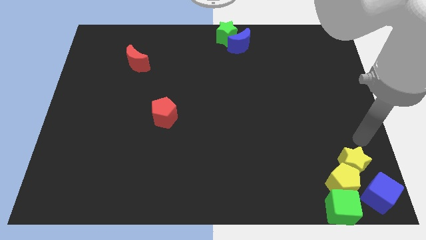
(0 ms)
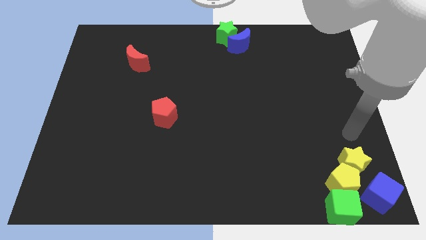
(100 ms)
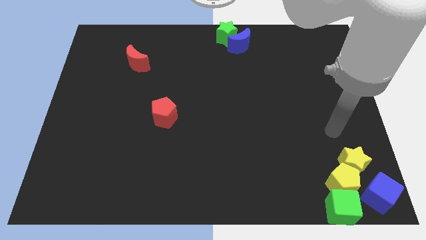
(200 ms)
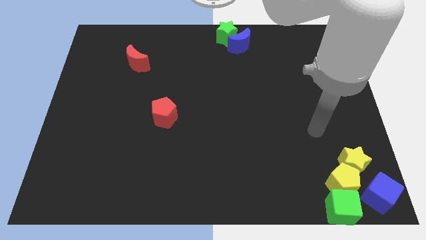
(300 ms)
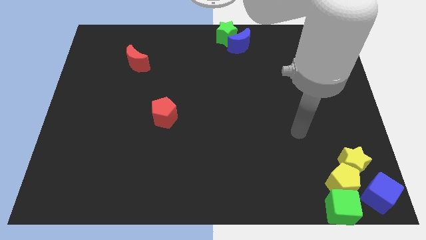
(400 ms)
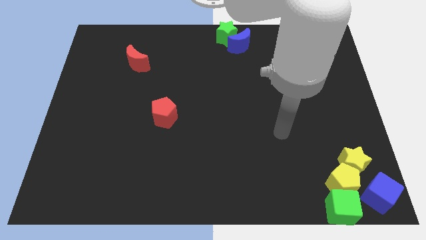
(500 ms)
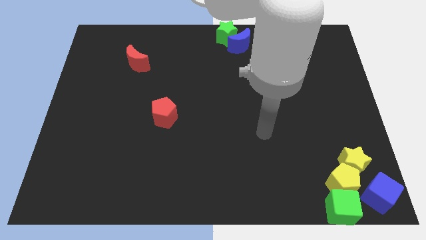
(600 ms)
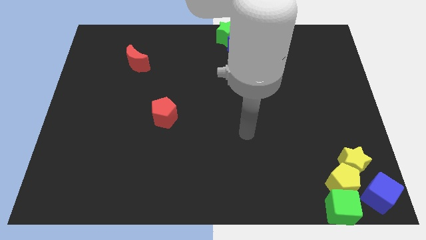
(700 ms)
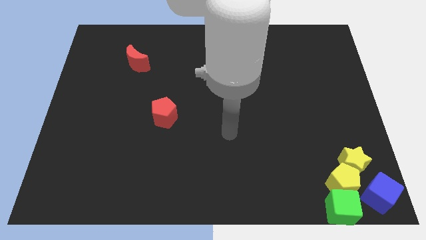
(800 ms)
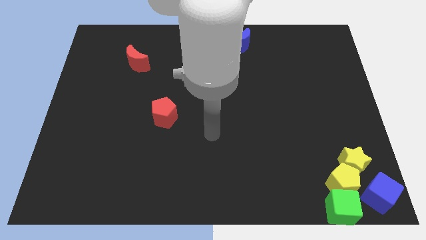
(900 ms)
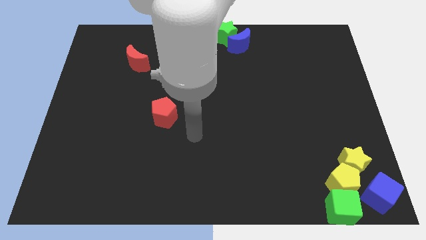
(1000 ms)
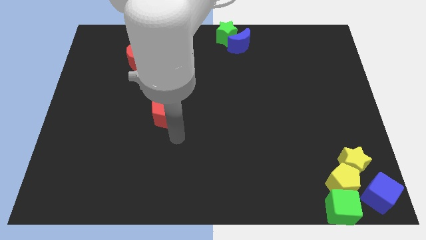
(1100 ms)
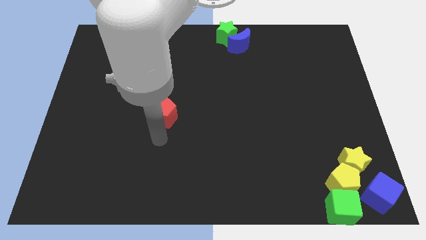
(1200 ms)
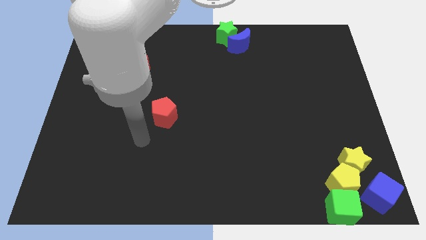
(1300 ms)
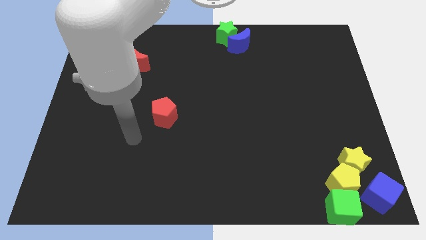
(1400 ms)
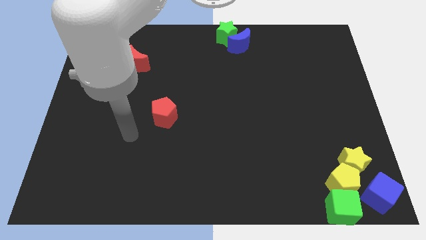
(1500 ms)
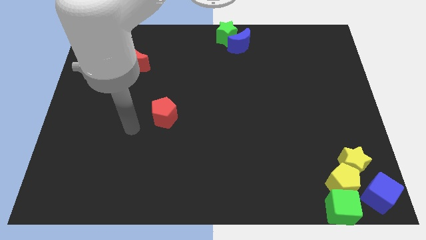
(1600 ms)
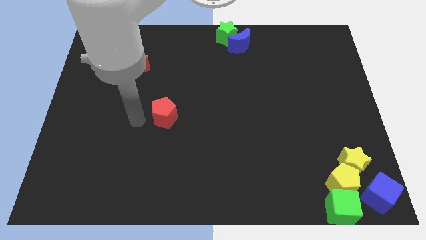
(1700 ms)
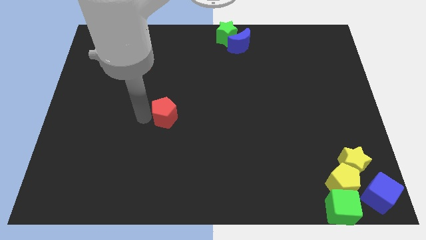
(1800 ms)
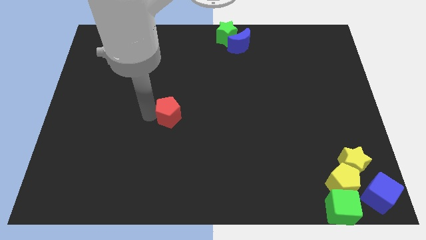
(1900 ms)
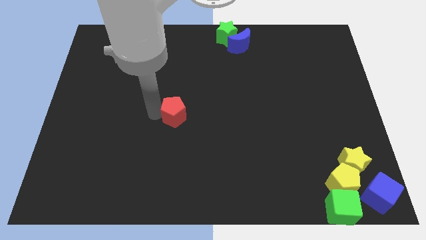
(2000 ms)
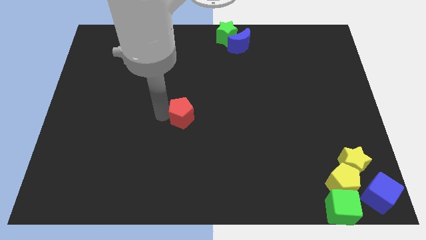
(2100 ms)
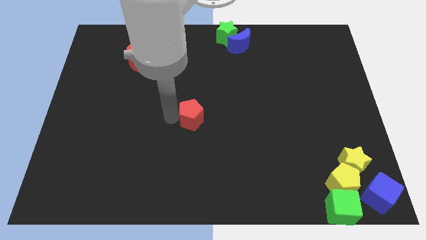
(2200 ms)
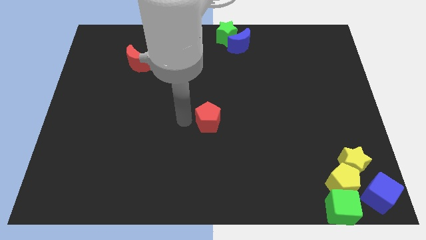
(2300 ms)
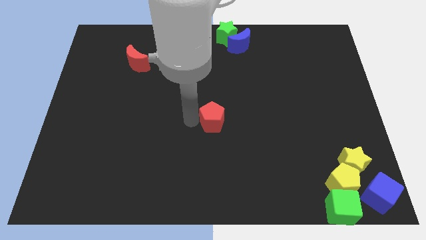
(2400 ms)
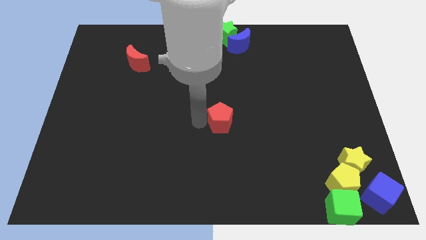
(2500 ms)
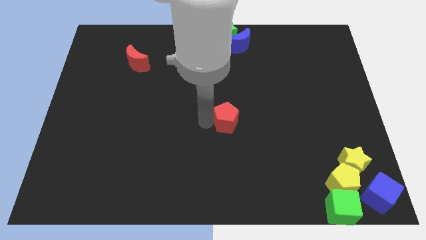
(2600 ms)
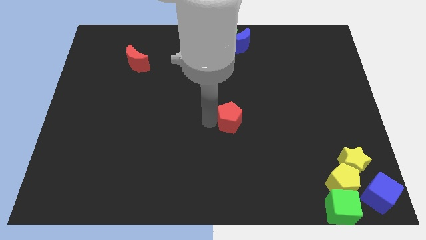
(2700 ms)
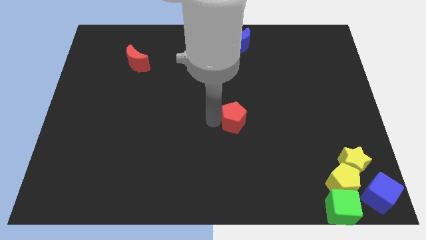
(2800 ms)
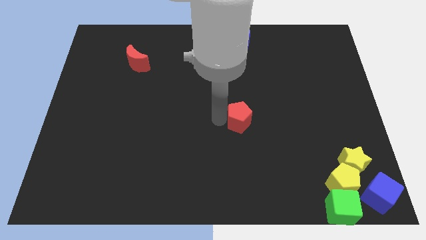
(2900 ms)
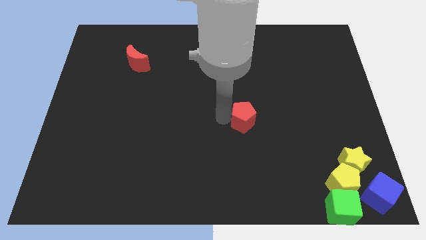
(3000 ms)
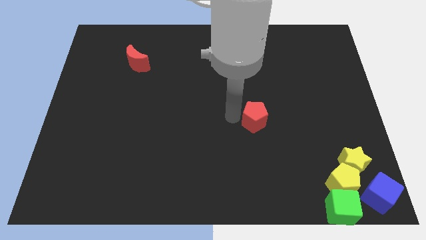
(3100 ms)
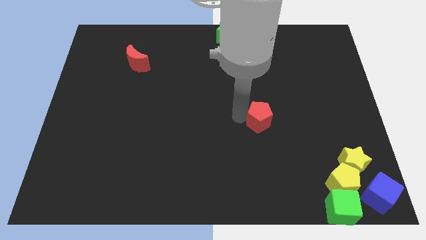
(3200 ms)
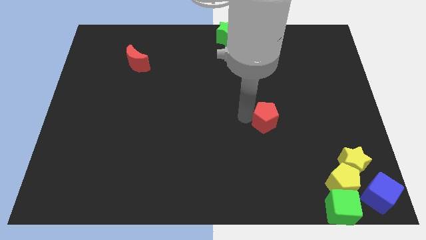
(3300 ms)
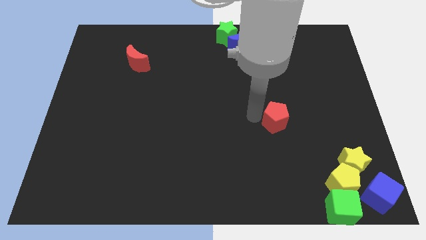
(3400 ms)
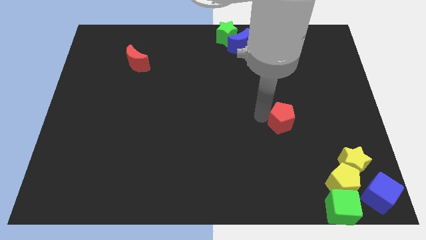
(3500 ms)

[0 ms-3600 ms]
move the red pentagon towards the right side of board

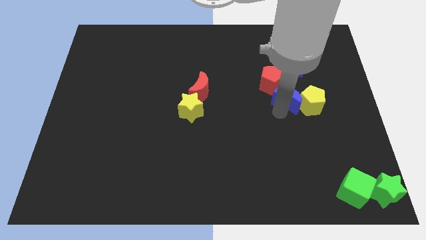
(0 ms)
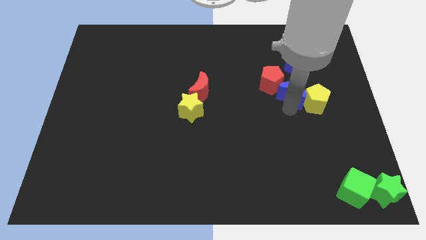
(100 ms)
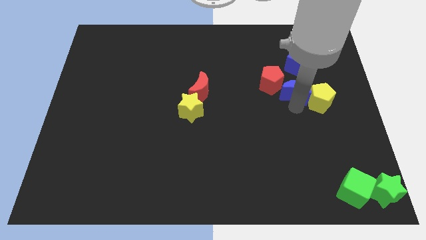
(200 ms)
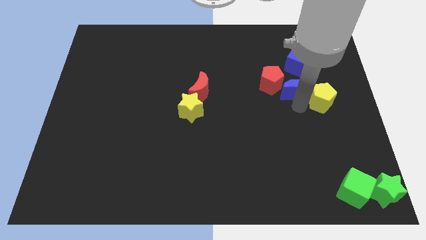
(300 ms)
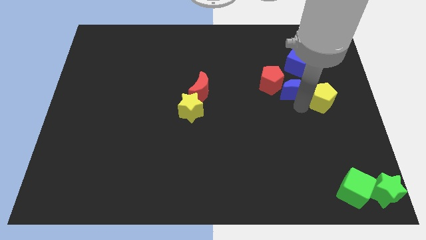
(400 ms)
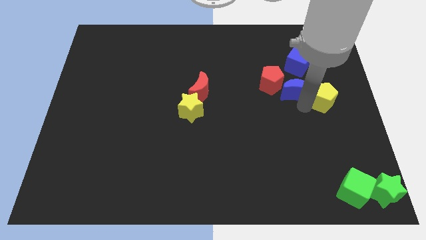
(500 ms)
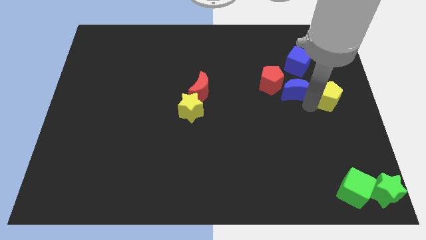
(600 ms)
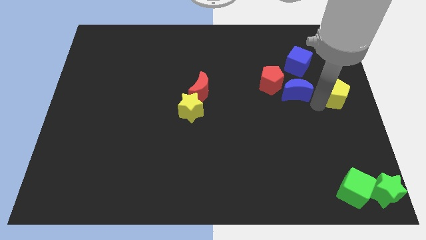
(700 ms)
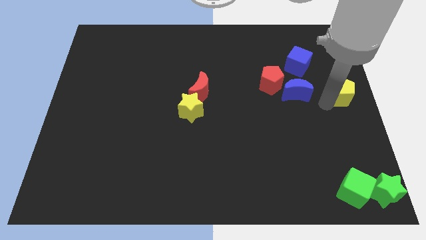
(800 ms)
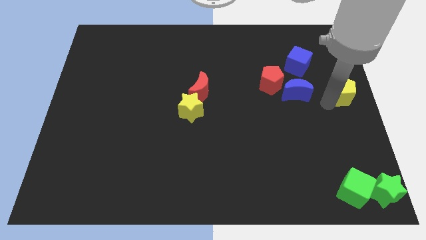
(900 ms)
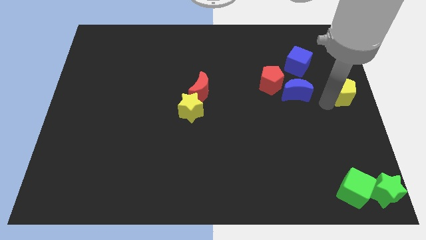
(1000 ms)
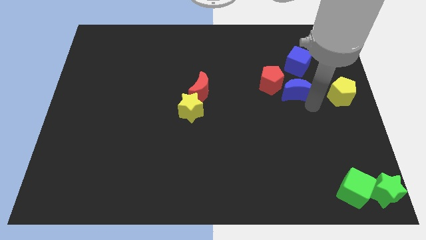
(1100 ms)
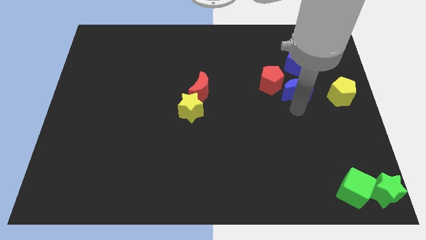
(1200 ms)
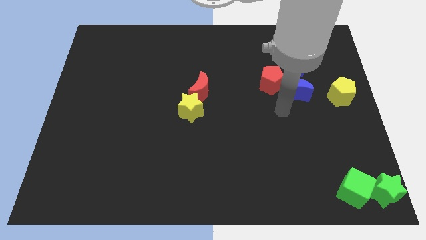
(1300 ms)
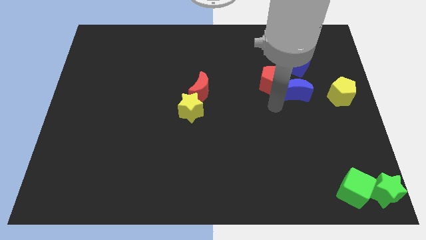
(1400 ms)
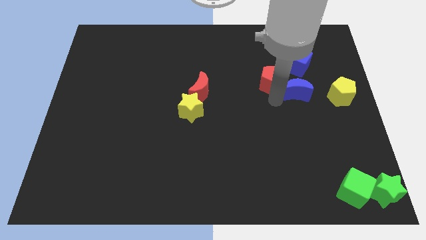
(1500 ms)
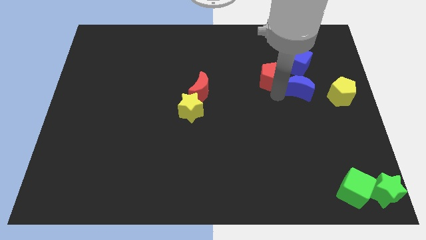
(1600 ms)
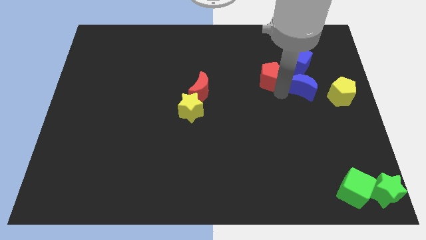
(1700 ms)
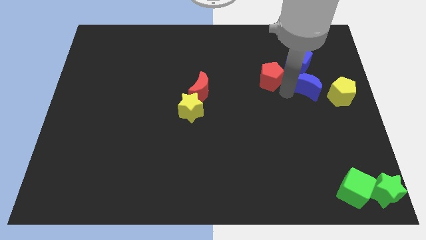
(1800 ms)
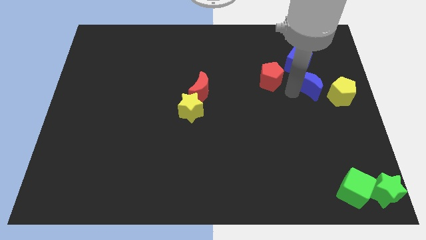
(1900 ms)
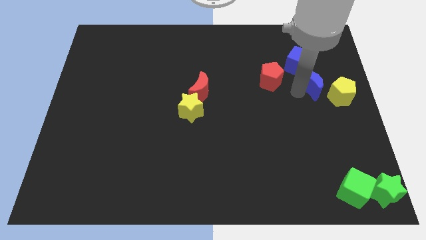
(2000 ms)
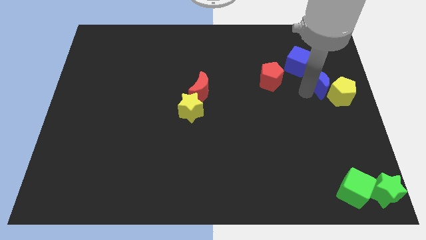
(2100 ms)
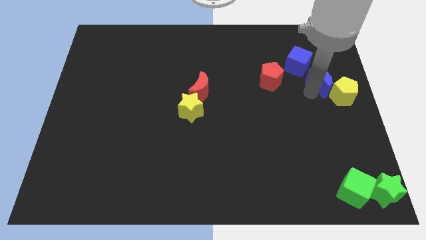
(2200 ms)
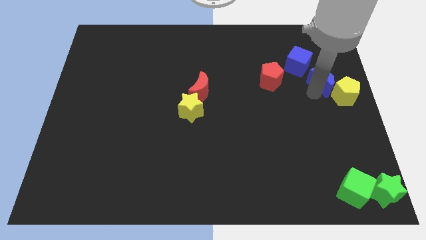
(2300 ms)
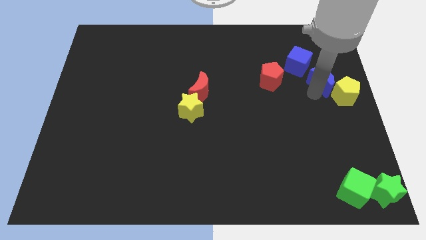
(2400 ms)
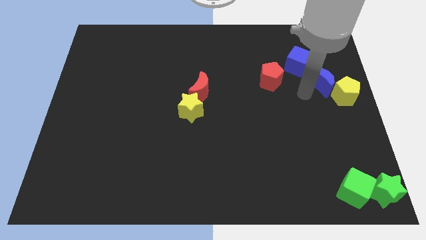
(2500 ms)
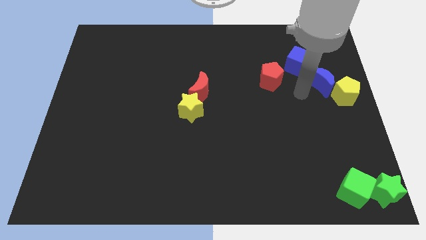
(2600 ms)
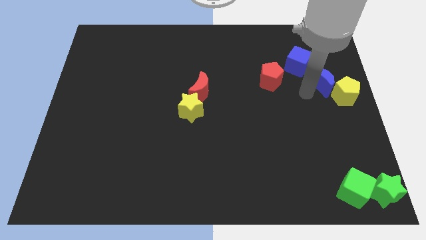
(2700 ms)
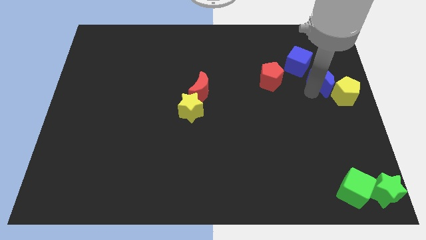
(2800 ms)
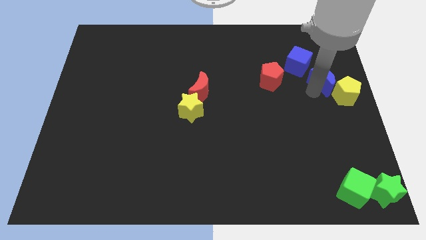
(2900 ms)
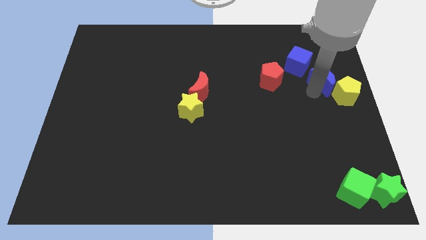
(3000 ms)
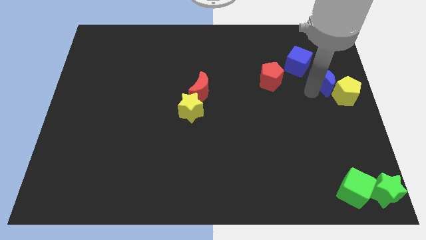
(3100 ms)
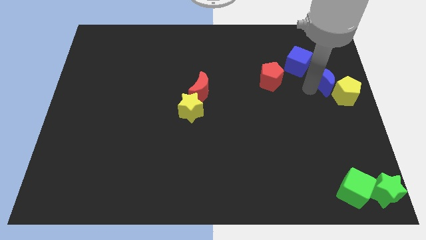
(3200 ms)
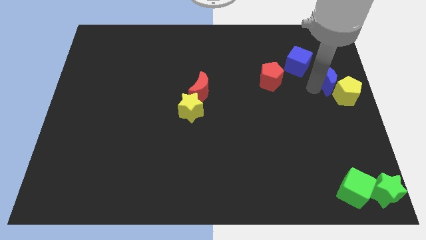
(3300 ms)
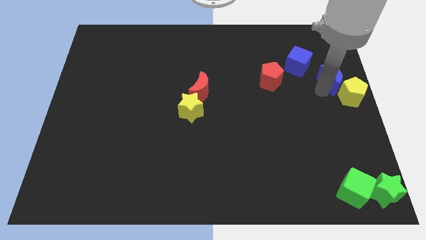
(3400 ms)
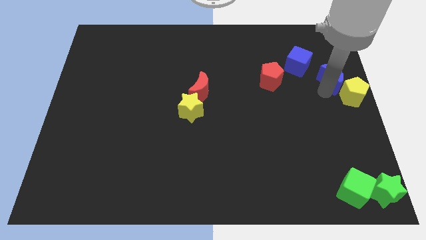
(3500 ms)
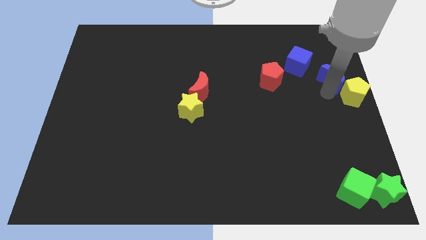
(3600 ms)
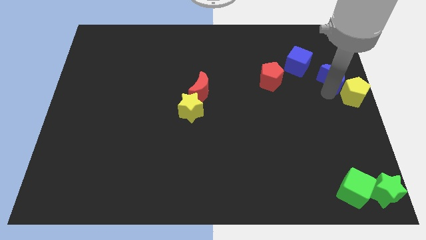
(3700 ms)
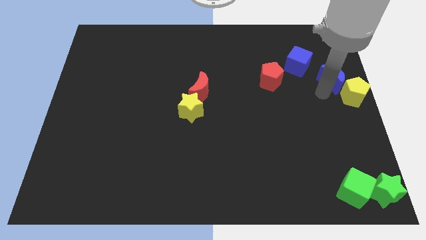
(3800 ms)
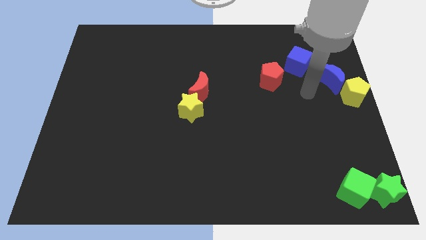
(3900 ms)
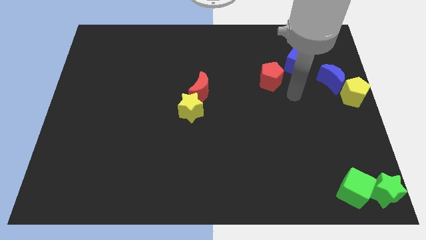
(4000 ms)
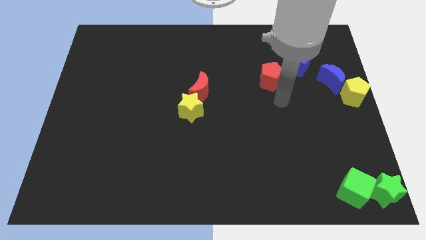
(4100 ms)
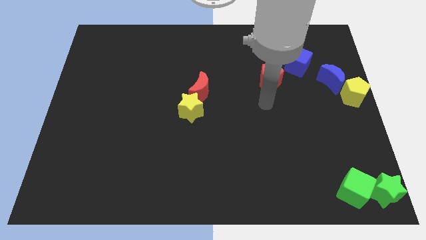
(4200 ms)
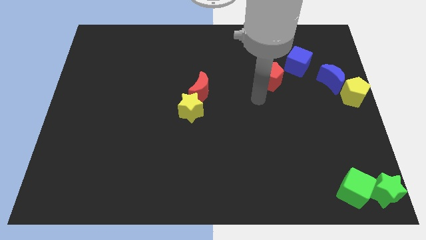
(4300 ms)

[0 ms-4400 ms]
push the blue crescent and yellow pentagon diagonally bottom right to the blue cube

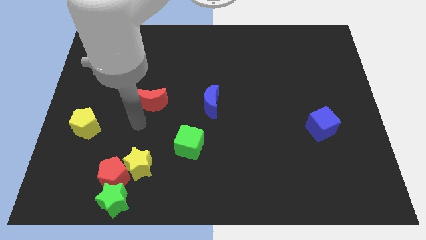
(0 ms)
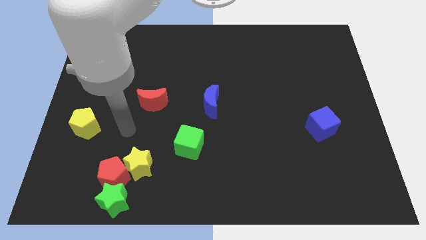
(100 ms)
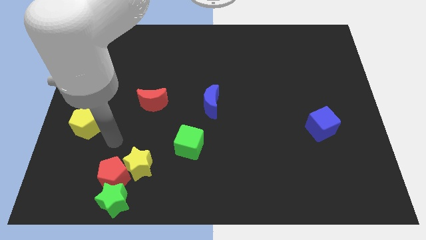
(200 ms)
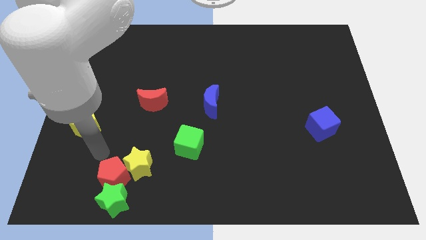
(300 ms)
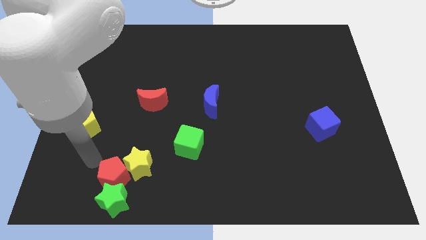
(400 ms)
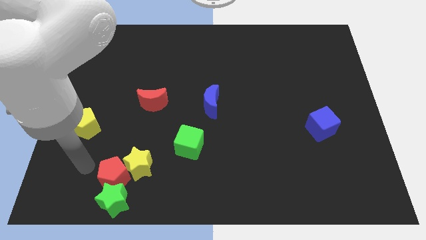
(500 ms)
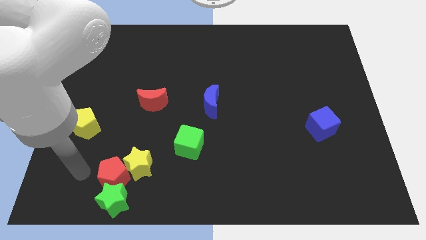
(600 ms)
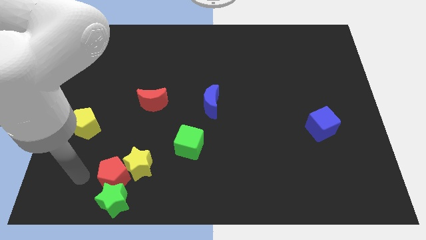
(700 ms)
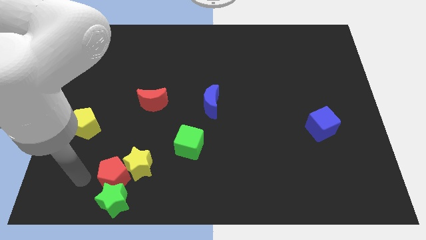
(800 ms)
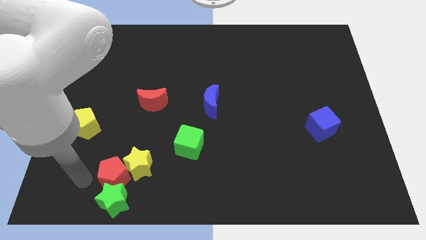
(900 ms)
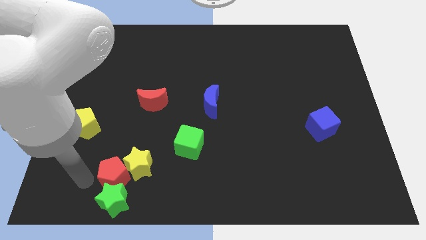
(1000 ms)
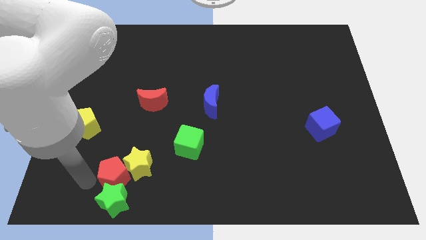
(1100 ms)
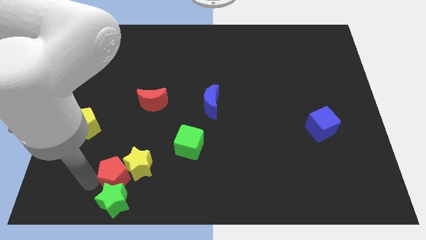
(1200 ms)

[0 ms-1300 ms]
move your arm towards the red pentagon
